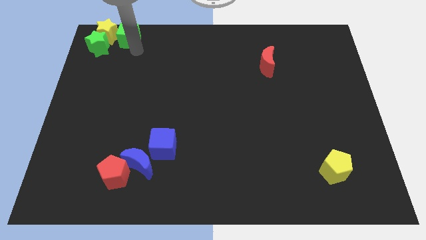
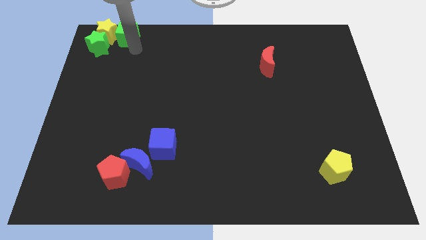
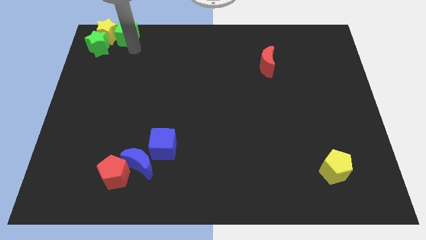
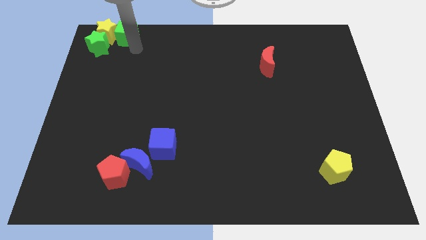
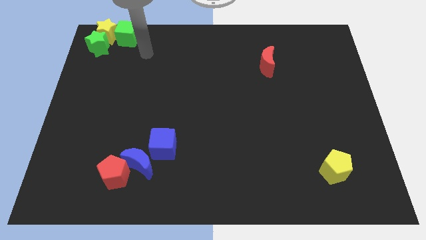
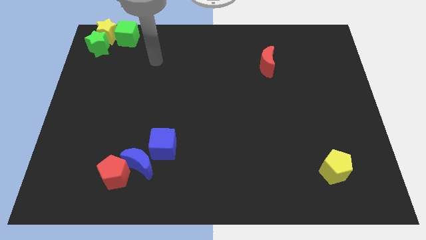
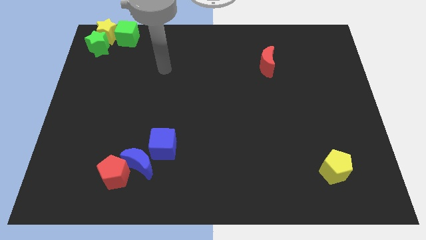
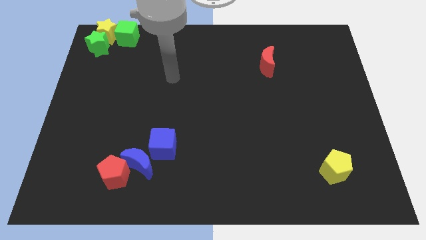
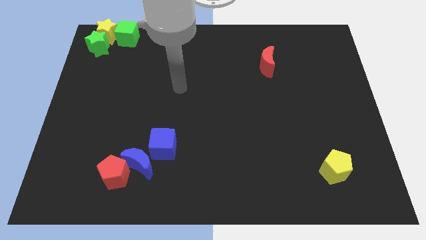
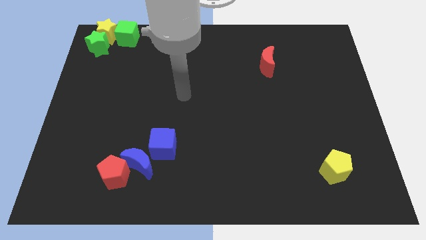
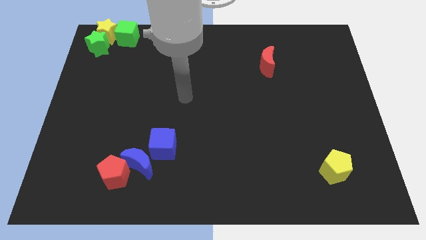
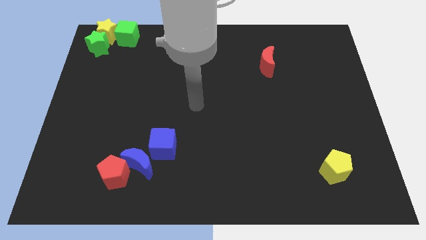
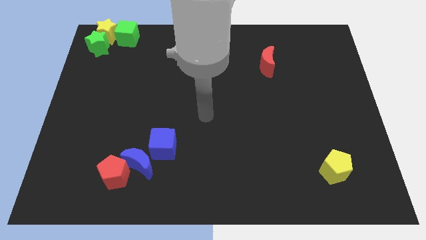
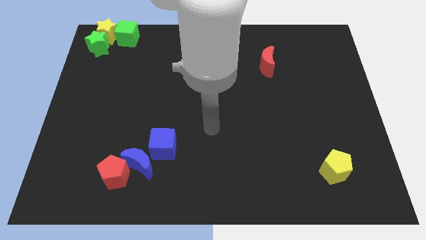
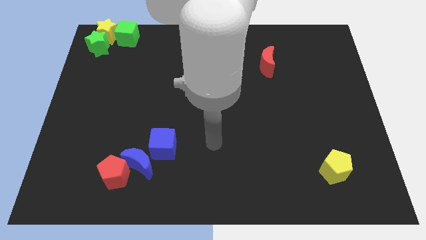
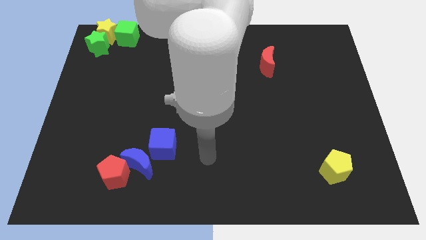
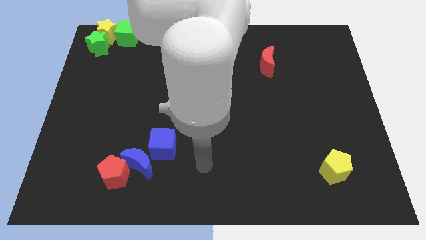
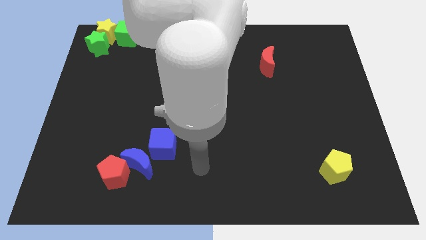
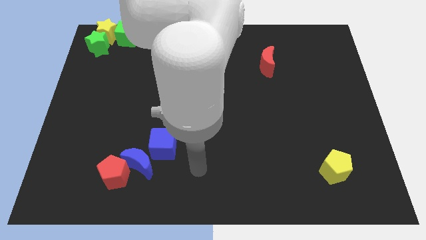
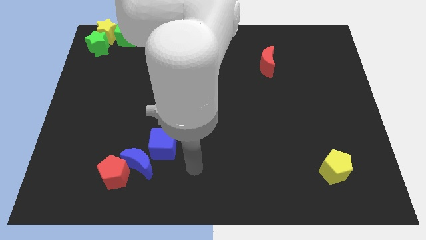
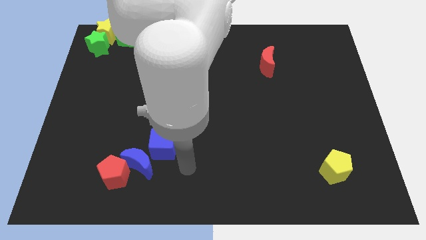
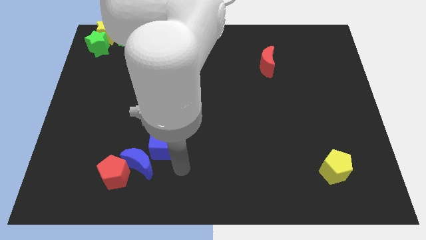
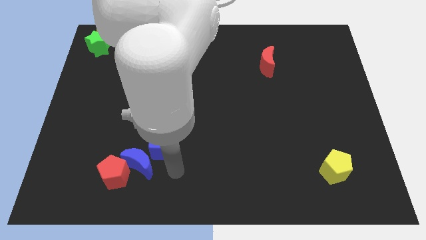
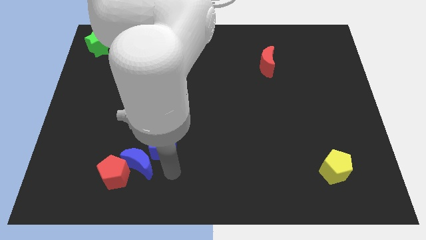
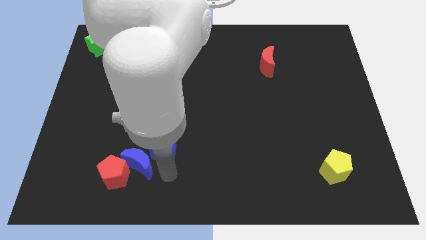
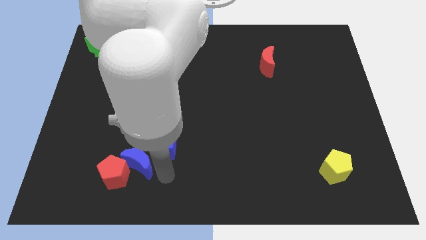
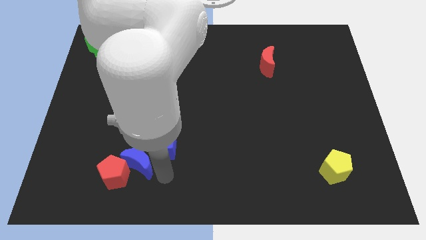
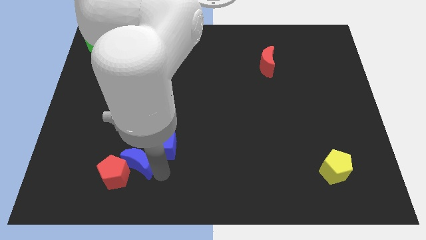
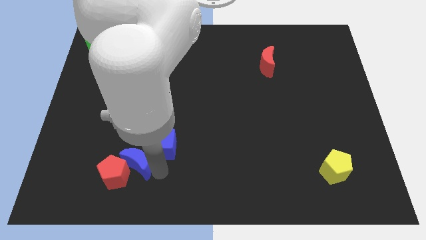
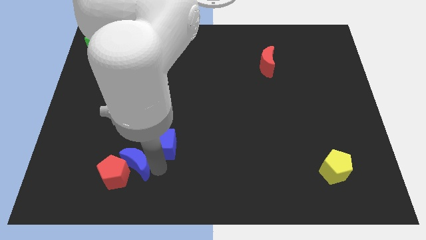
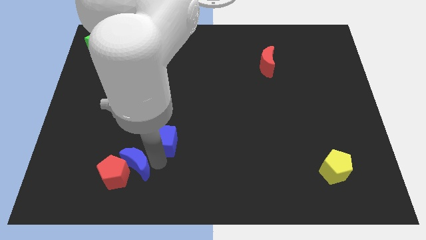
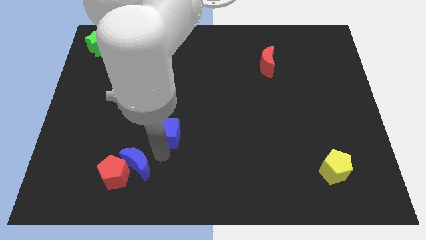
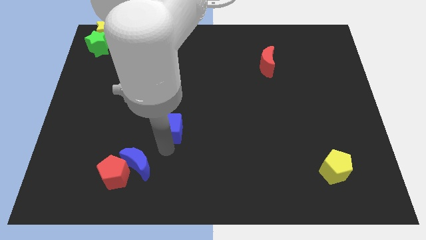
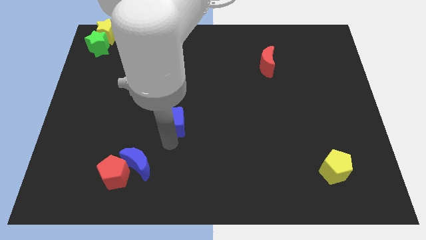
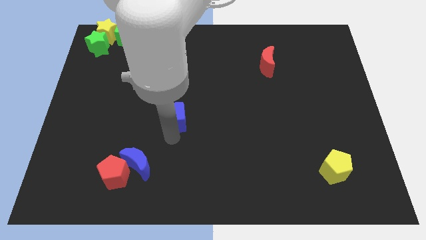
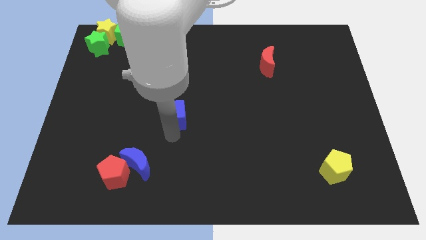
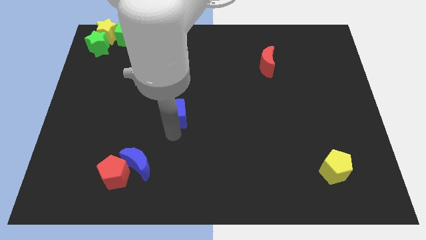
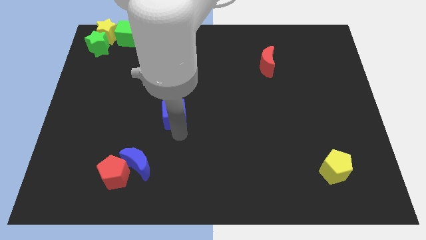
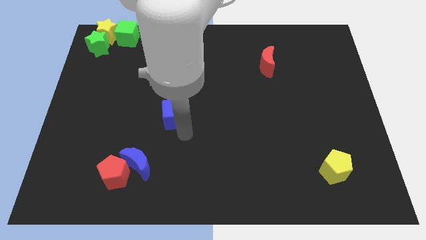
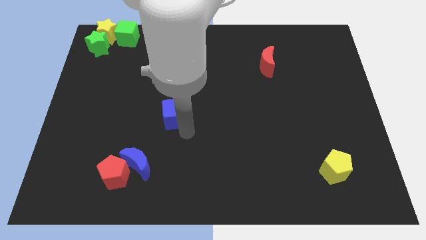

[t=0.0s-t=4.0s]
separate the blue cube and blue moon towards the top

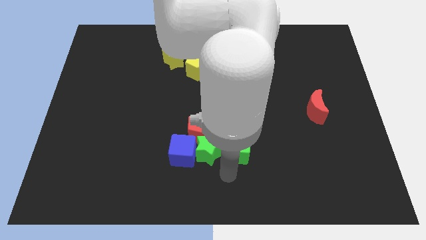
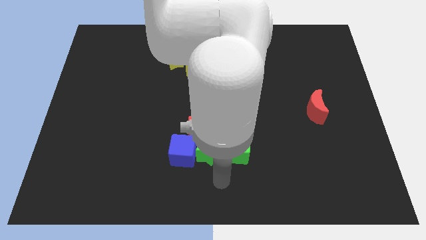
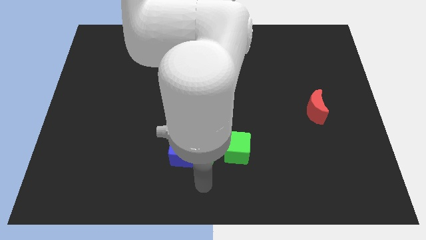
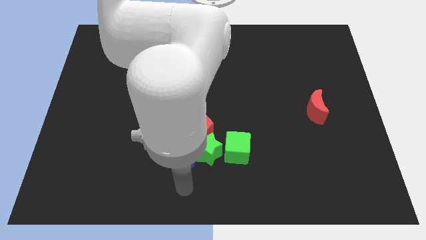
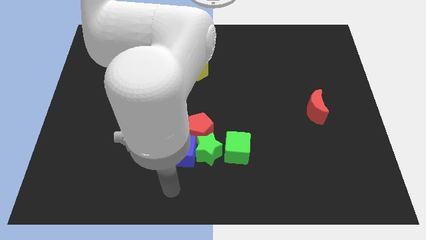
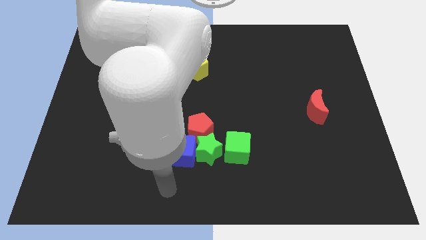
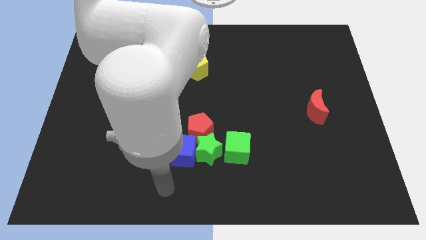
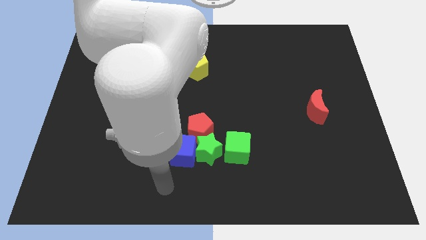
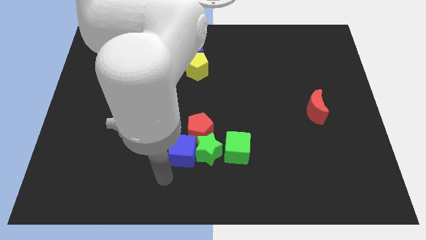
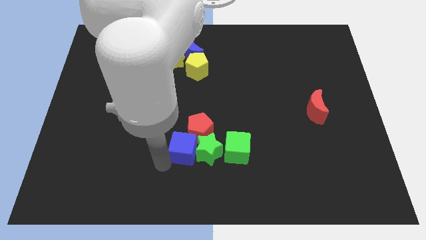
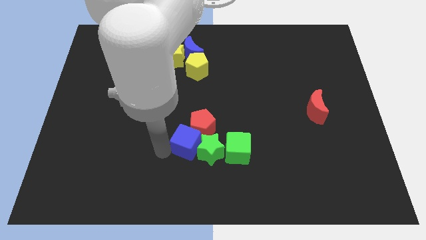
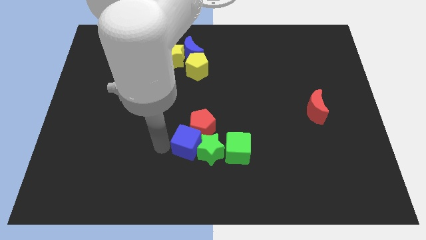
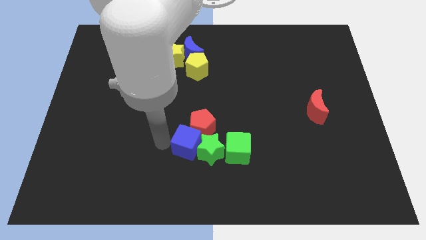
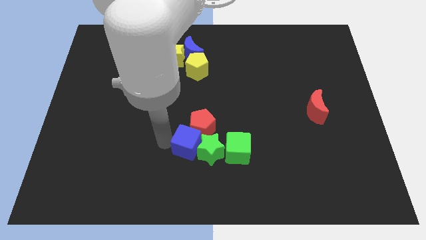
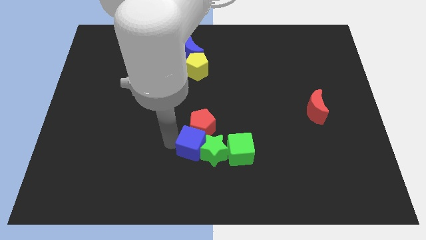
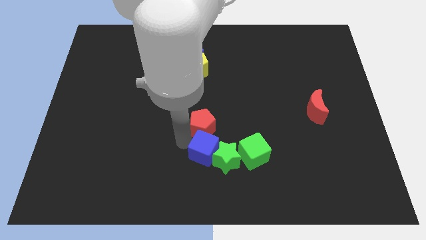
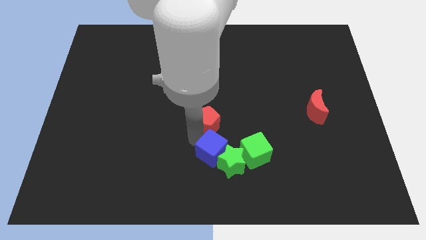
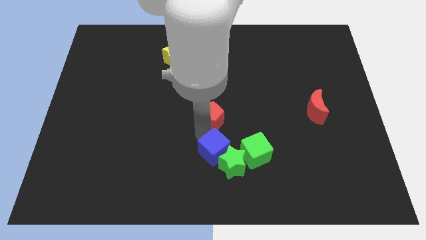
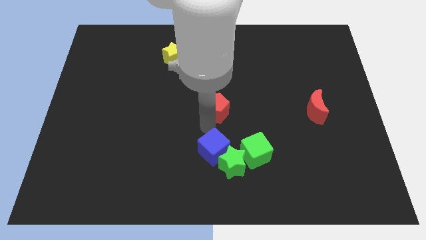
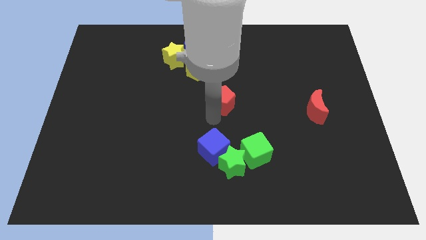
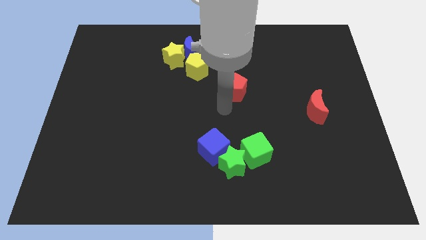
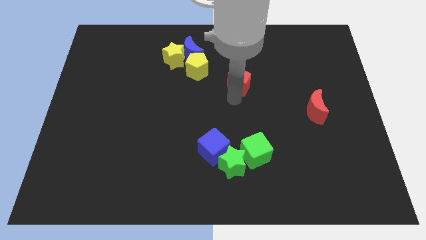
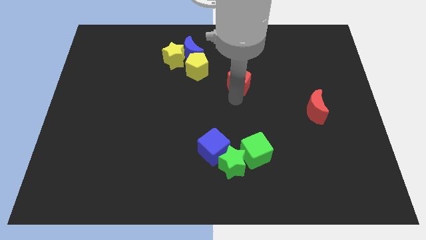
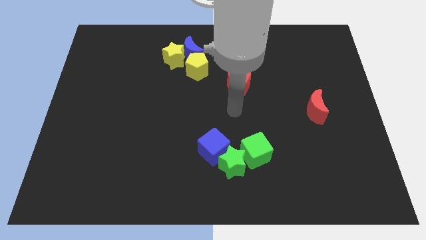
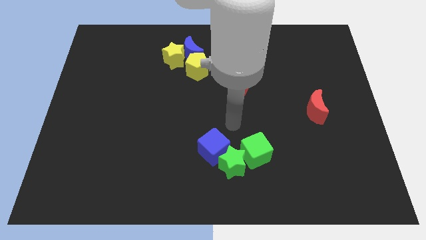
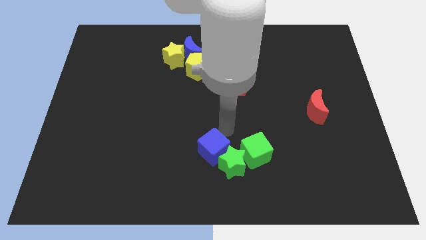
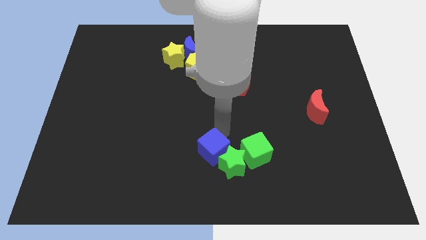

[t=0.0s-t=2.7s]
move the red pentagon away from the blue cube

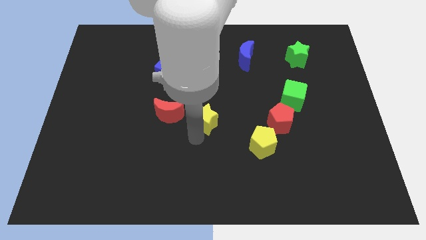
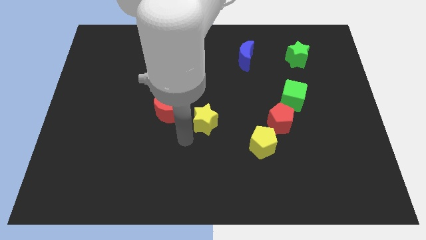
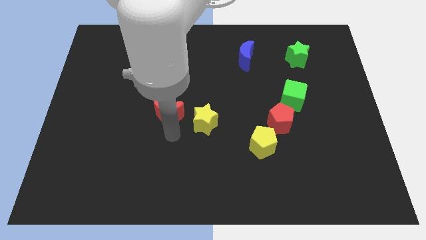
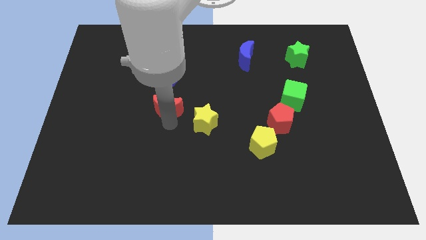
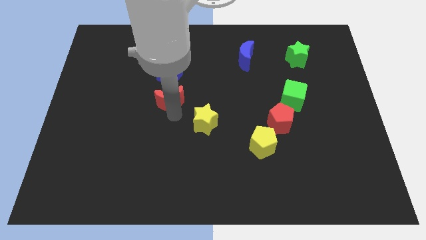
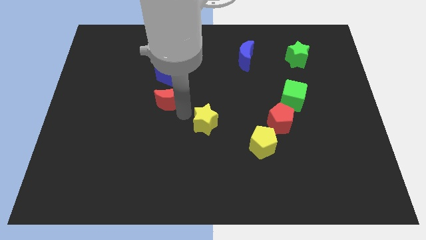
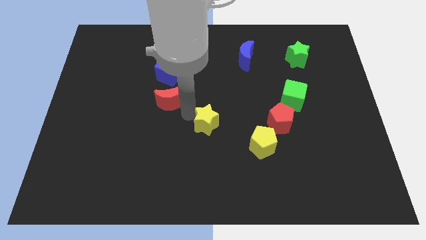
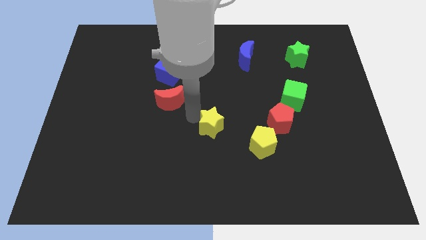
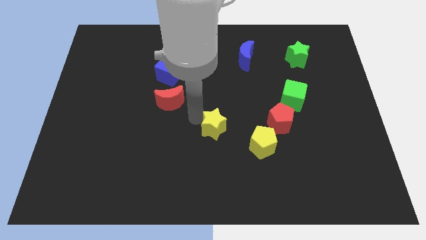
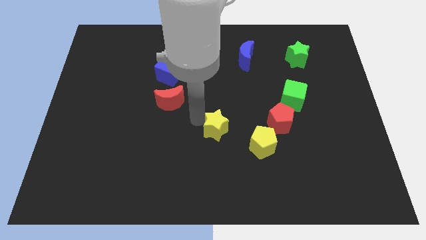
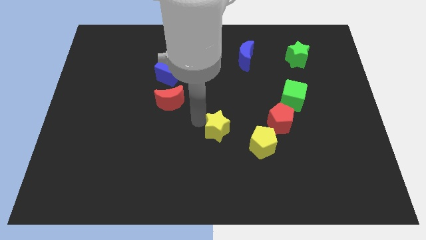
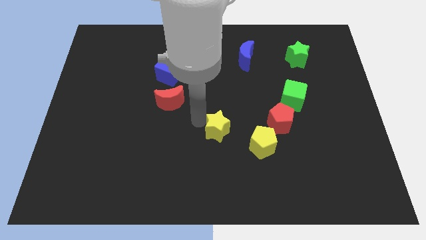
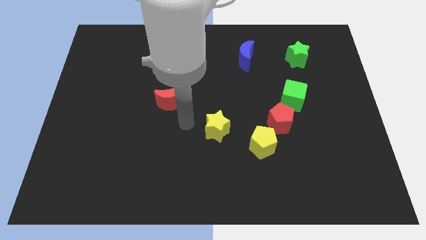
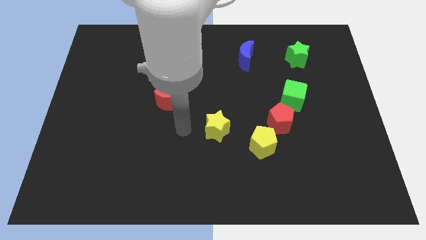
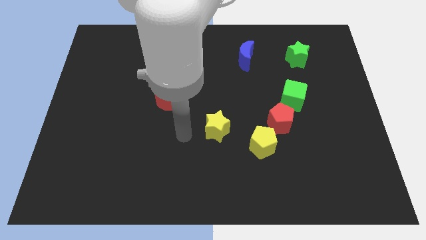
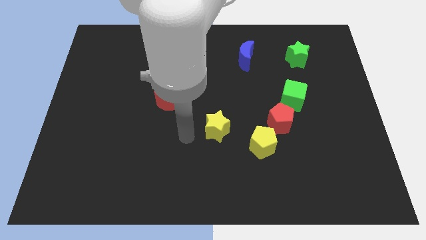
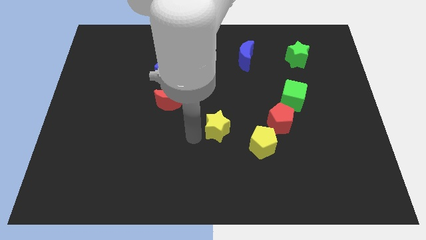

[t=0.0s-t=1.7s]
separate the yellow star from the red crescent

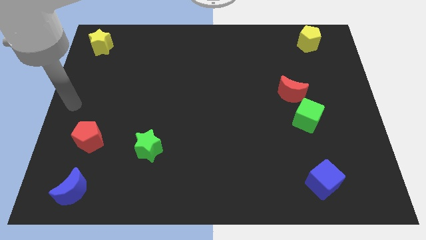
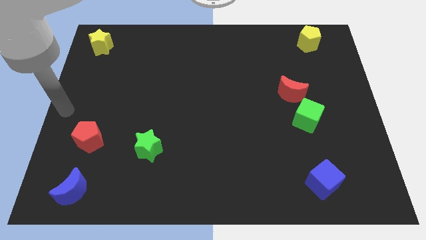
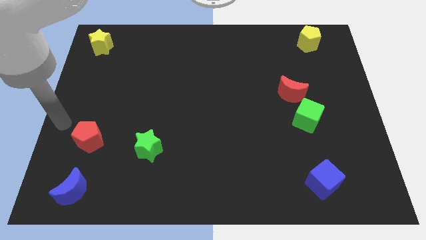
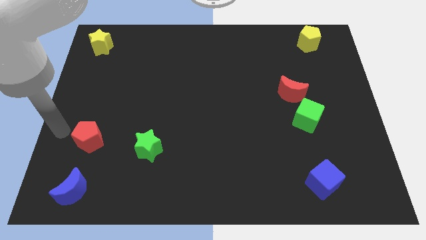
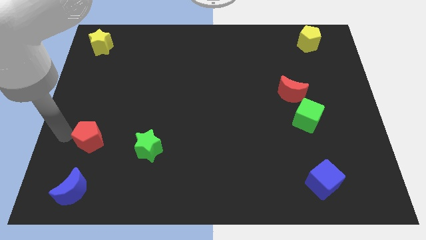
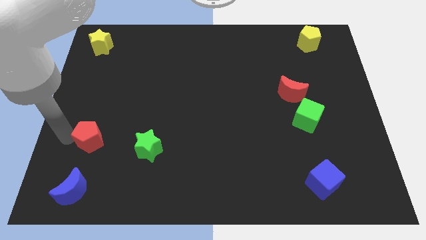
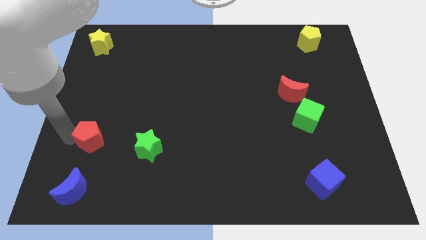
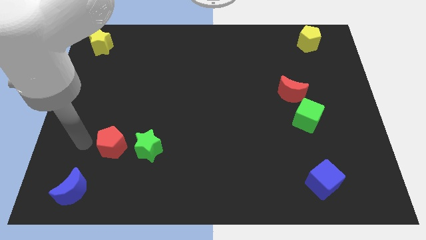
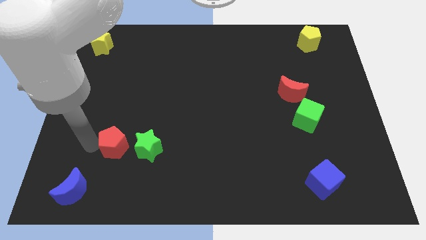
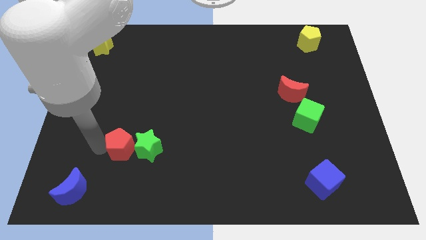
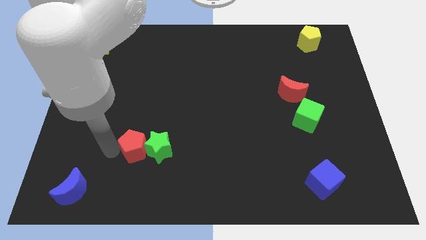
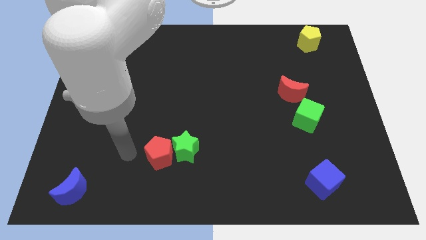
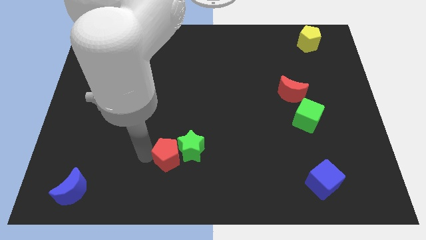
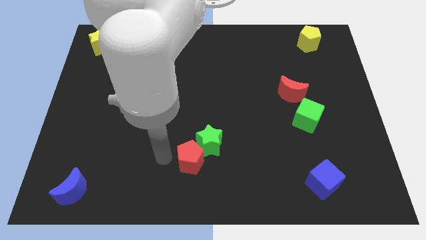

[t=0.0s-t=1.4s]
push the green star with the red pentagon towards the bottom center of the board
